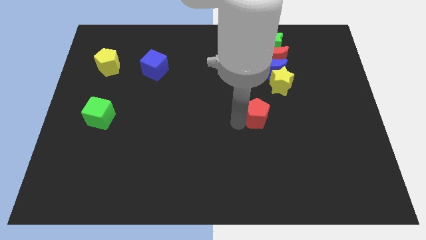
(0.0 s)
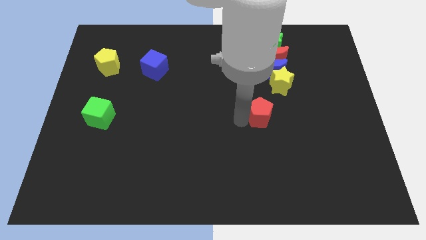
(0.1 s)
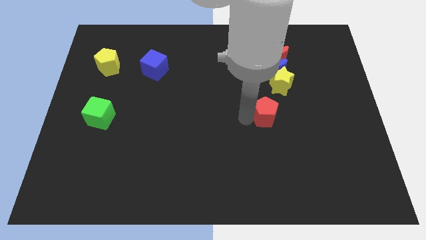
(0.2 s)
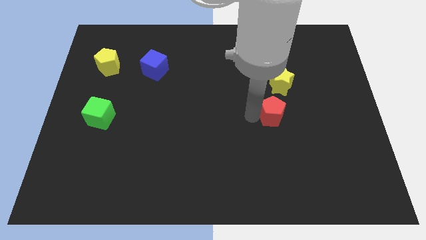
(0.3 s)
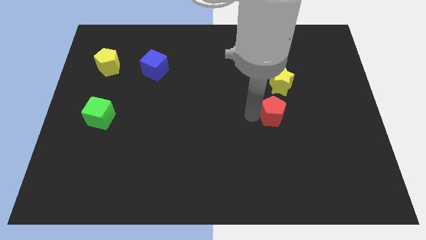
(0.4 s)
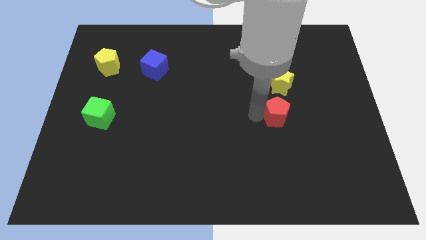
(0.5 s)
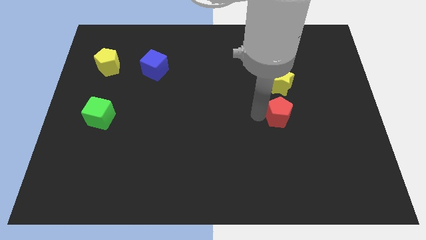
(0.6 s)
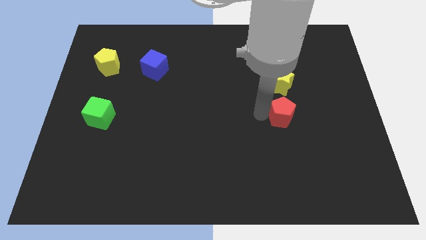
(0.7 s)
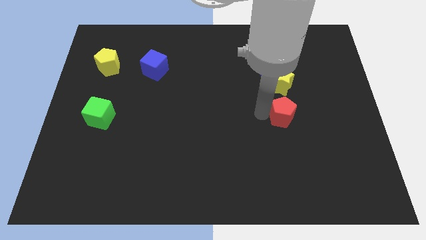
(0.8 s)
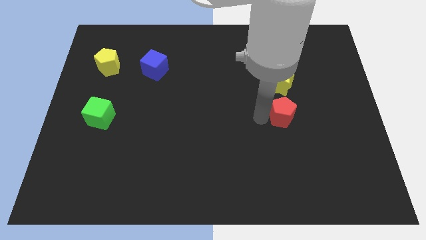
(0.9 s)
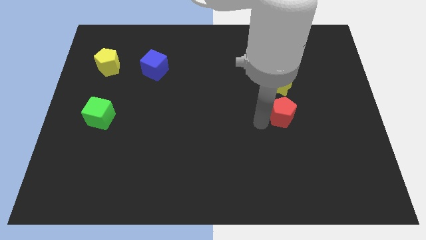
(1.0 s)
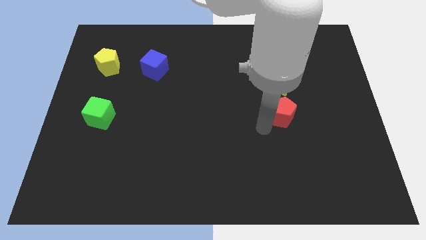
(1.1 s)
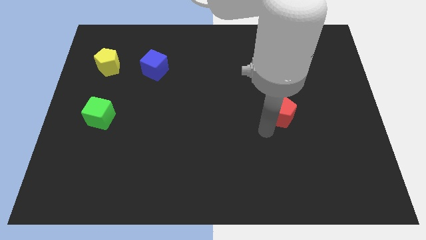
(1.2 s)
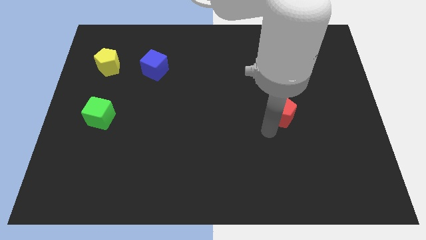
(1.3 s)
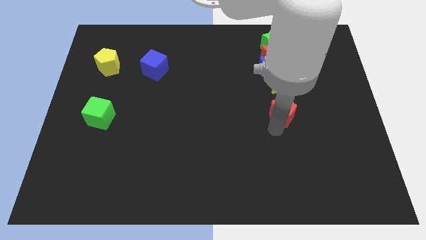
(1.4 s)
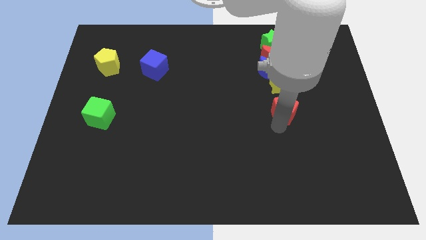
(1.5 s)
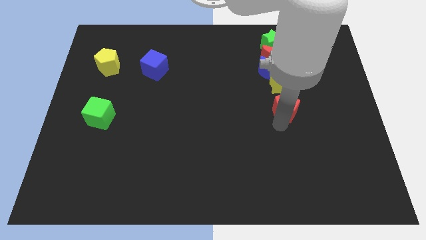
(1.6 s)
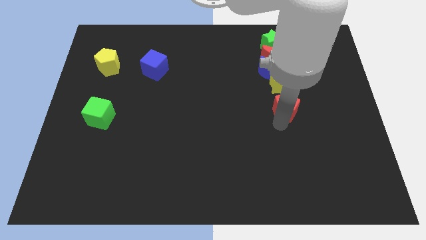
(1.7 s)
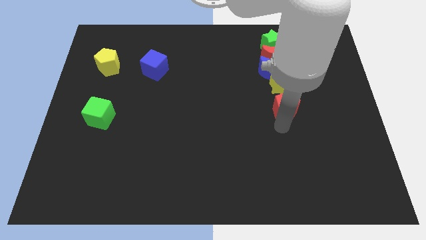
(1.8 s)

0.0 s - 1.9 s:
place the red pentagon below the yellow star

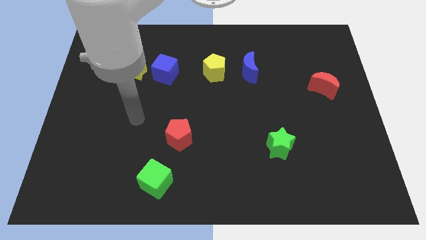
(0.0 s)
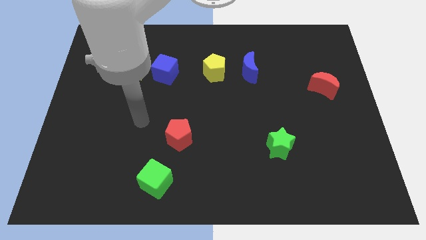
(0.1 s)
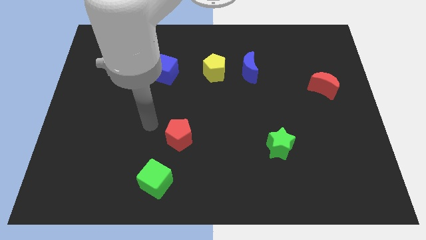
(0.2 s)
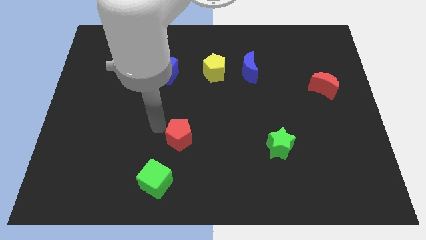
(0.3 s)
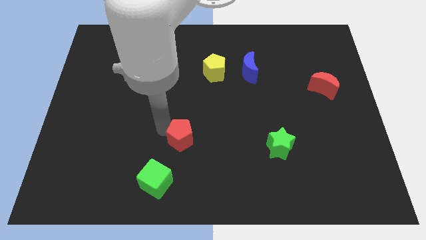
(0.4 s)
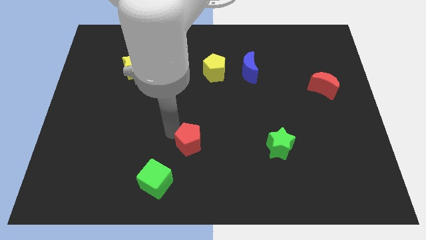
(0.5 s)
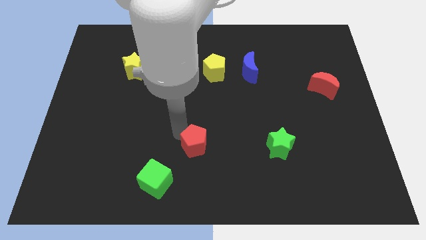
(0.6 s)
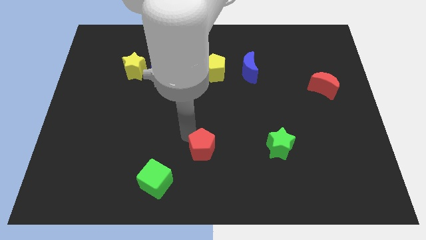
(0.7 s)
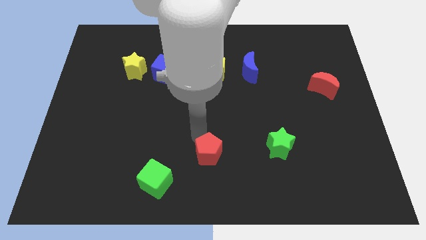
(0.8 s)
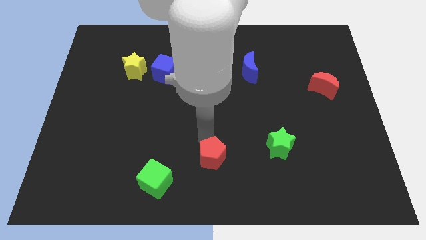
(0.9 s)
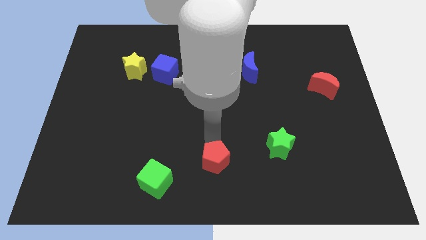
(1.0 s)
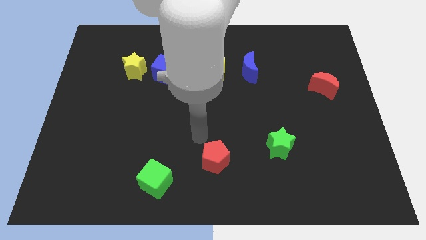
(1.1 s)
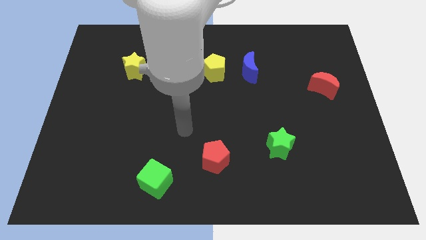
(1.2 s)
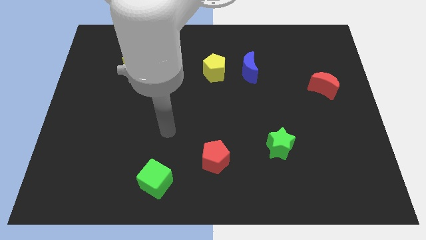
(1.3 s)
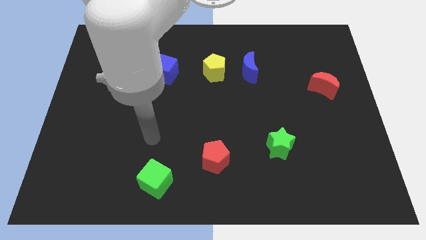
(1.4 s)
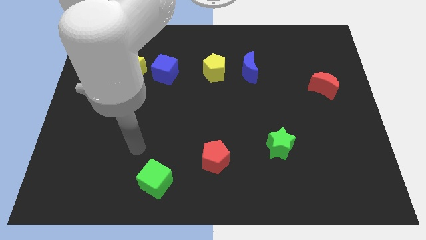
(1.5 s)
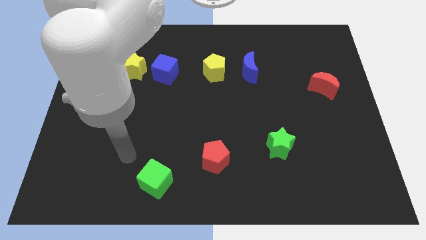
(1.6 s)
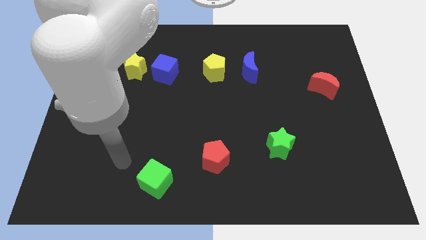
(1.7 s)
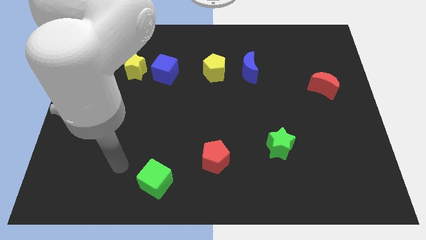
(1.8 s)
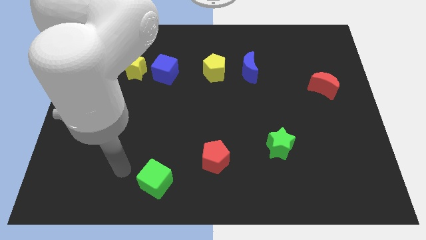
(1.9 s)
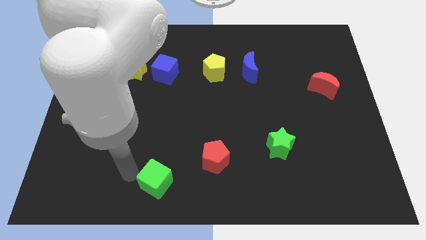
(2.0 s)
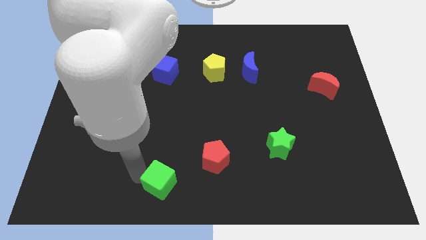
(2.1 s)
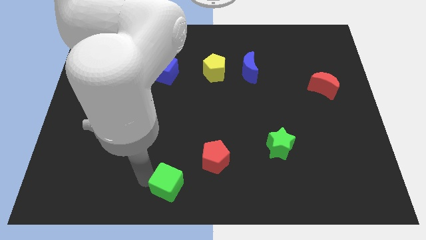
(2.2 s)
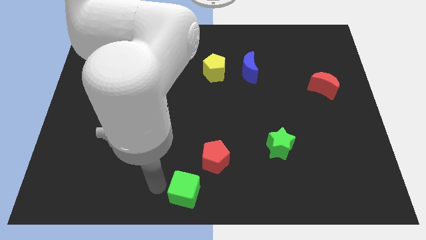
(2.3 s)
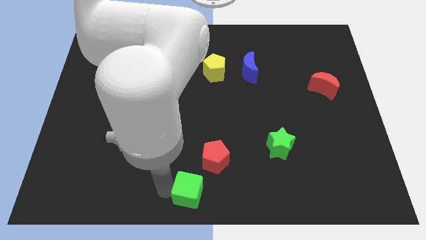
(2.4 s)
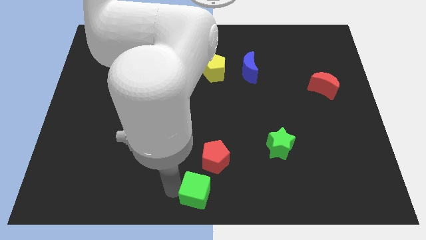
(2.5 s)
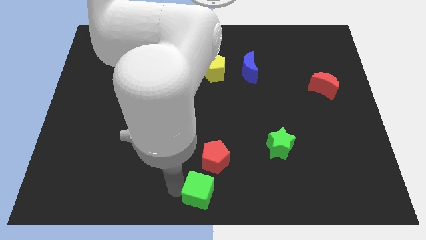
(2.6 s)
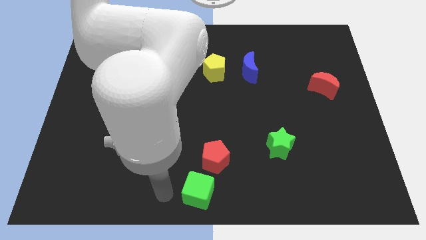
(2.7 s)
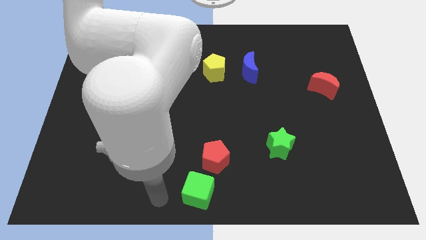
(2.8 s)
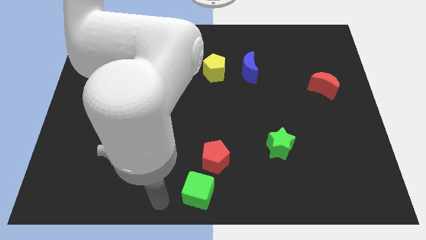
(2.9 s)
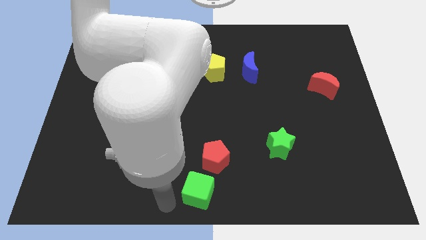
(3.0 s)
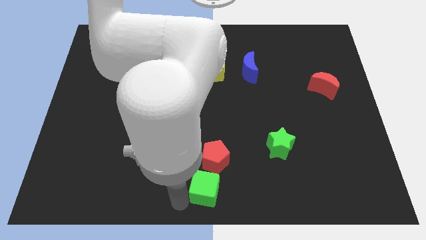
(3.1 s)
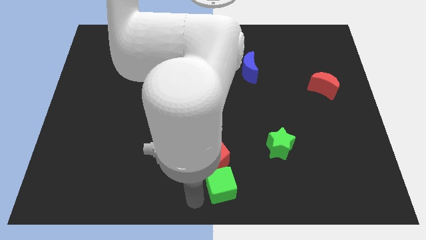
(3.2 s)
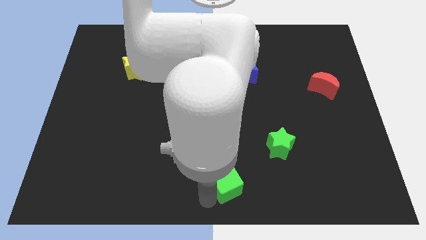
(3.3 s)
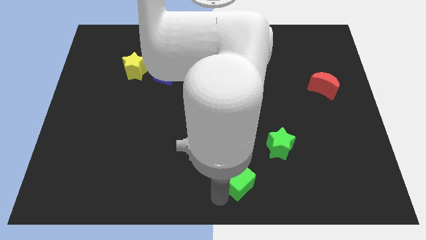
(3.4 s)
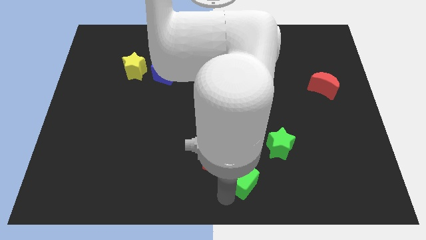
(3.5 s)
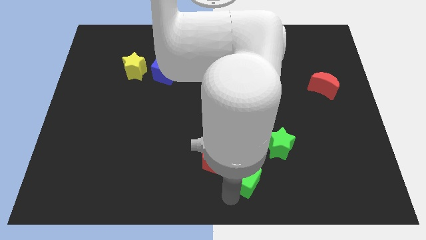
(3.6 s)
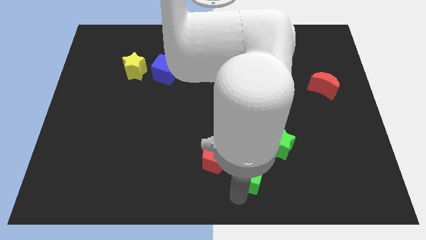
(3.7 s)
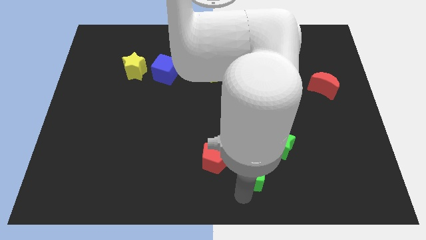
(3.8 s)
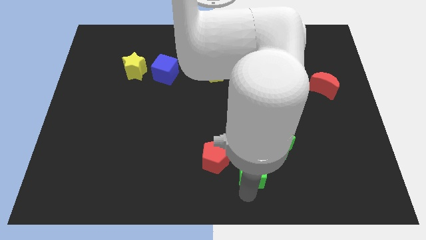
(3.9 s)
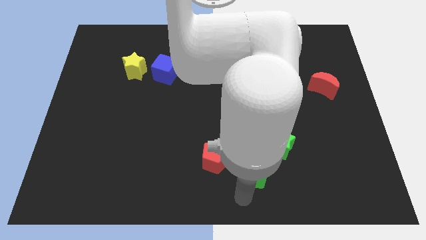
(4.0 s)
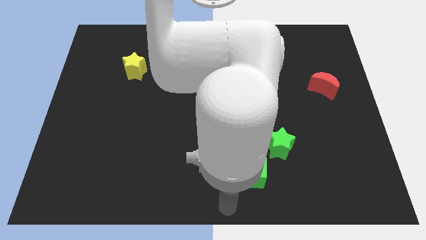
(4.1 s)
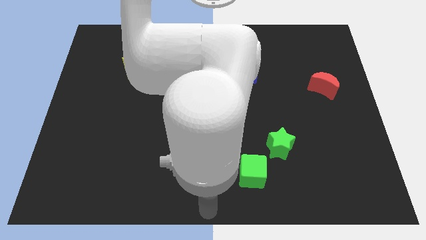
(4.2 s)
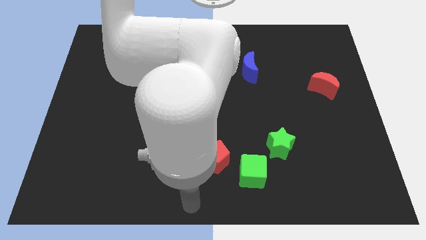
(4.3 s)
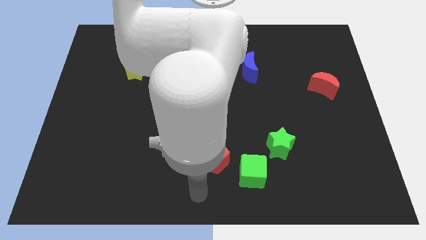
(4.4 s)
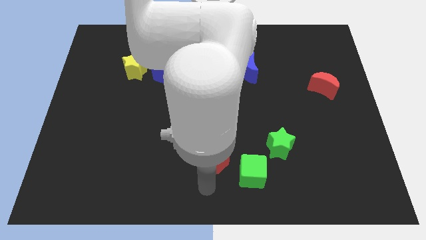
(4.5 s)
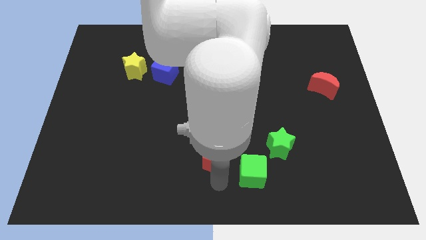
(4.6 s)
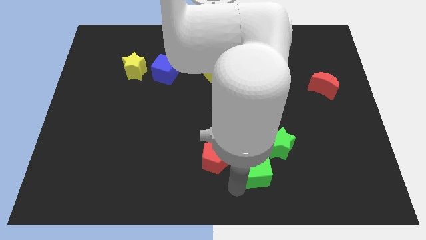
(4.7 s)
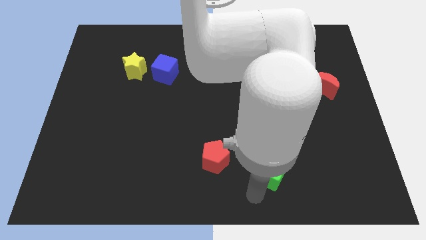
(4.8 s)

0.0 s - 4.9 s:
push the green cube below the green star

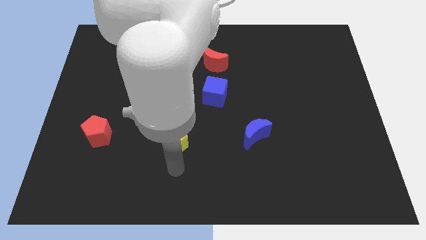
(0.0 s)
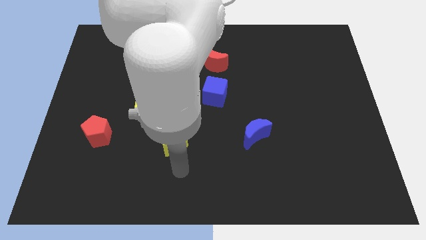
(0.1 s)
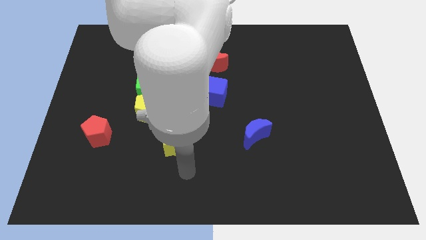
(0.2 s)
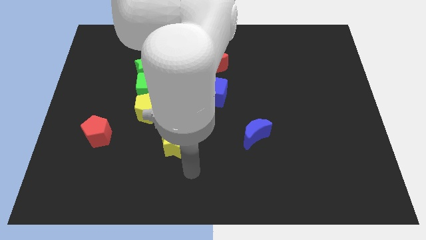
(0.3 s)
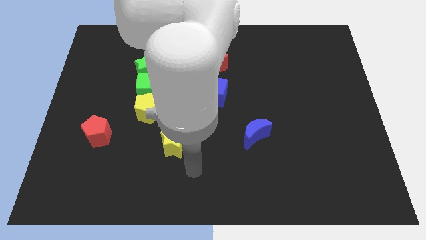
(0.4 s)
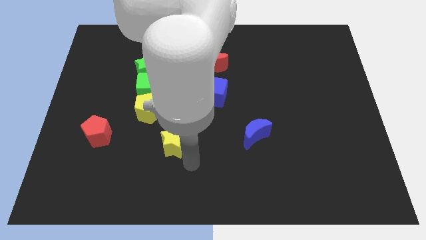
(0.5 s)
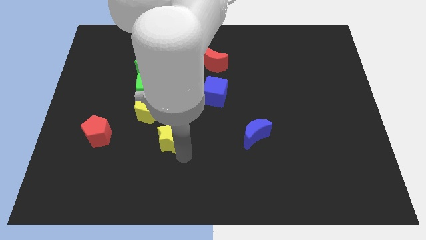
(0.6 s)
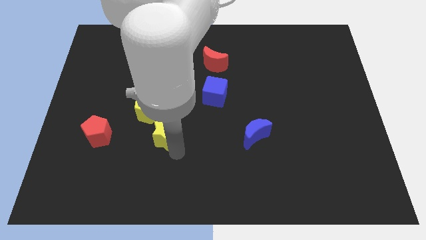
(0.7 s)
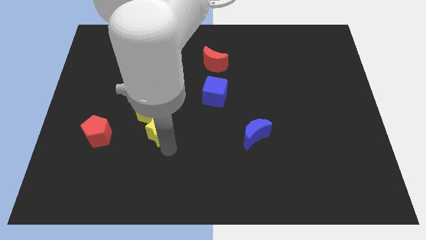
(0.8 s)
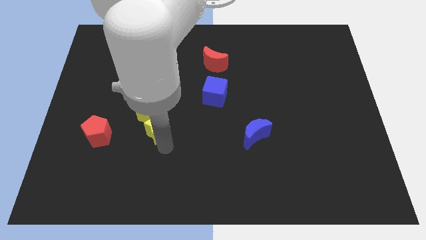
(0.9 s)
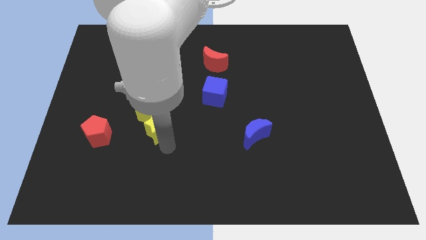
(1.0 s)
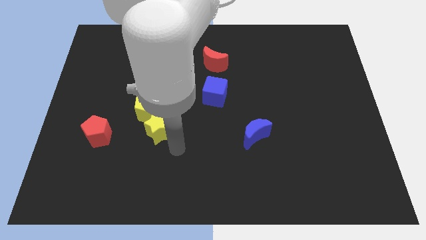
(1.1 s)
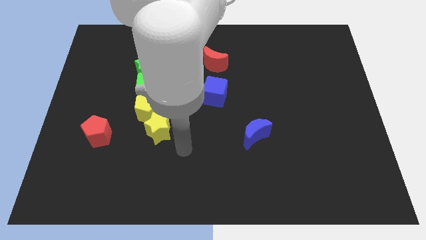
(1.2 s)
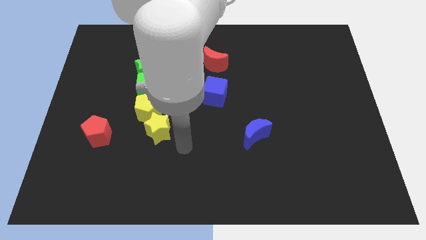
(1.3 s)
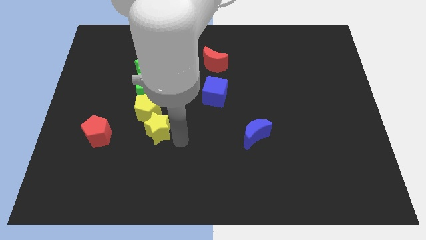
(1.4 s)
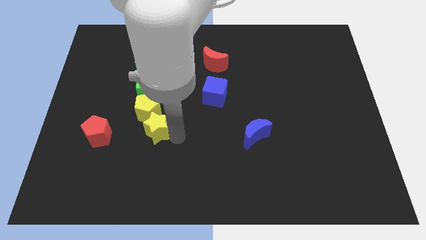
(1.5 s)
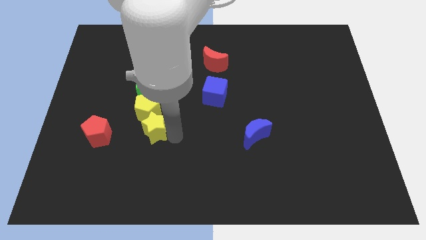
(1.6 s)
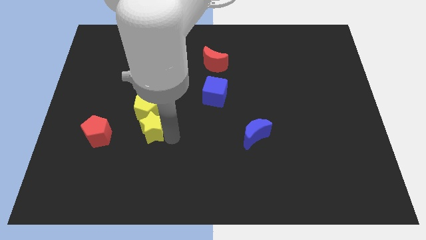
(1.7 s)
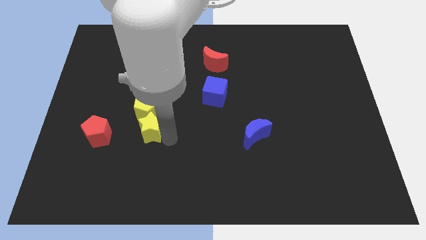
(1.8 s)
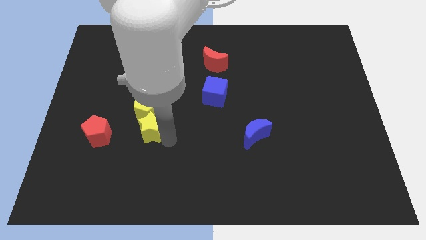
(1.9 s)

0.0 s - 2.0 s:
place the yellow star to the bottom of the yellow pentagon

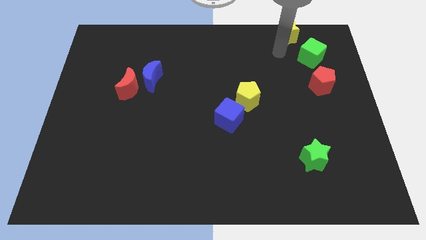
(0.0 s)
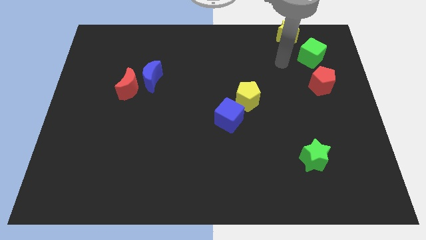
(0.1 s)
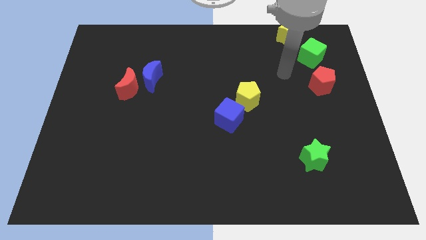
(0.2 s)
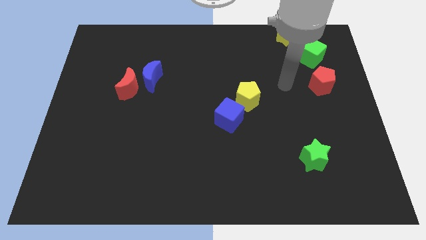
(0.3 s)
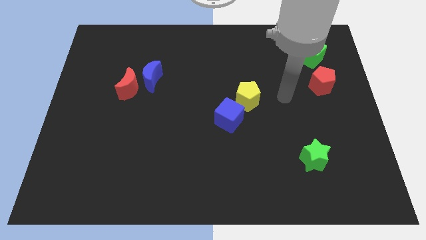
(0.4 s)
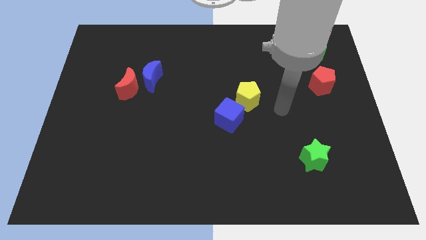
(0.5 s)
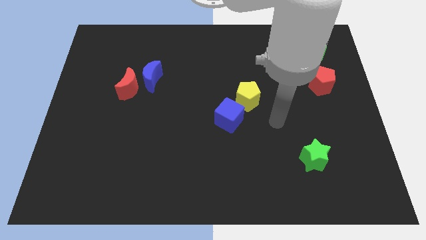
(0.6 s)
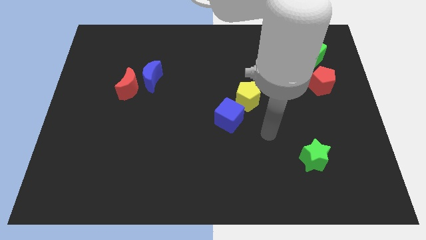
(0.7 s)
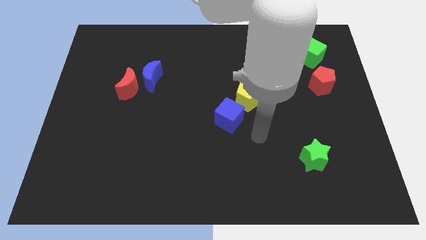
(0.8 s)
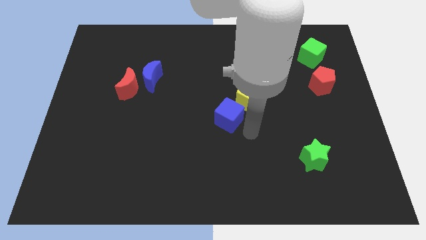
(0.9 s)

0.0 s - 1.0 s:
point your arm at the bottom of the yellow pentagon
